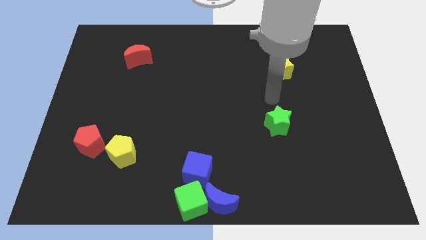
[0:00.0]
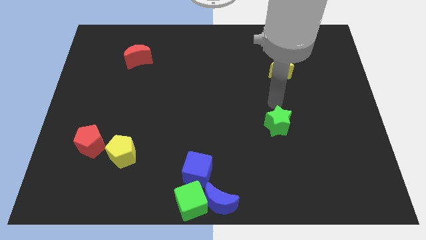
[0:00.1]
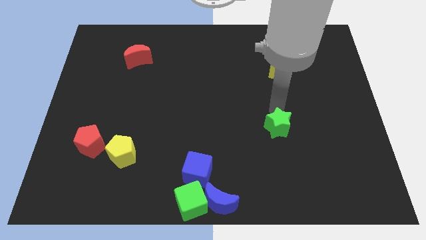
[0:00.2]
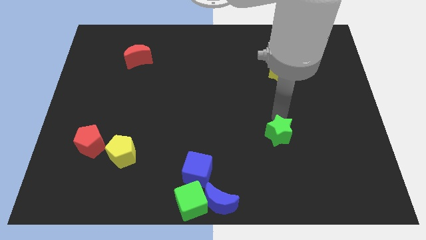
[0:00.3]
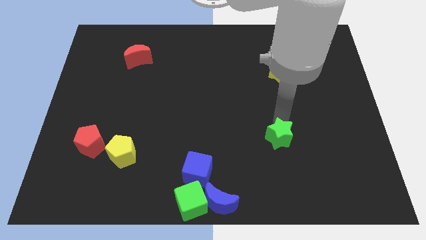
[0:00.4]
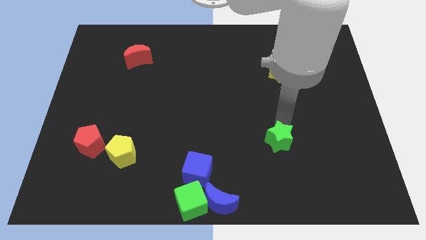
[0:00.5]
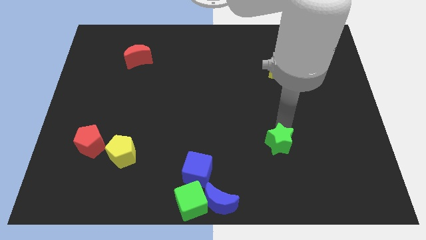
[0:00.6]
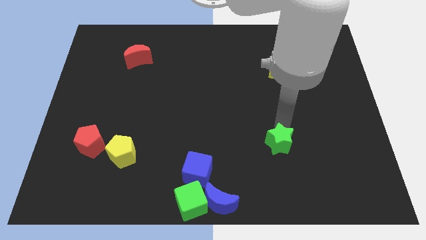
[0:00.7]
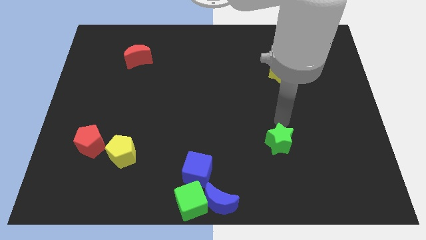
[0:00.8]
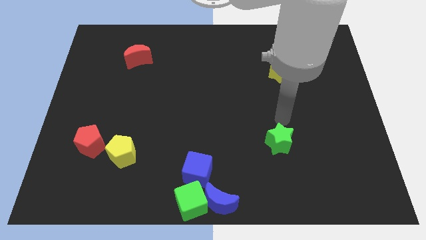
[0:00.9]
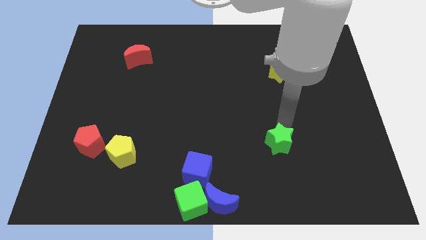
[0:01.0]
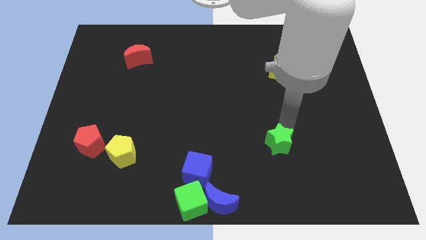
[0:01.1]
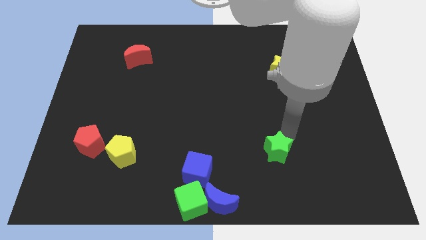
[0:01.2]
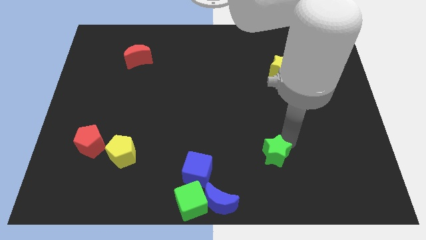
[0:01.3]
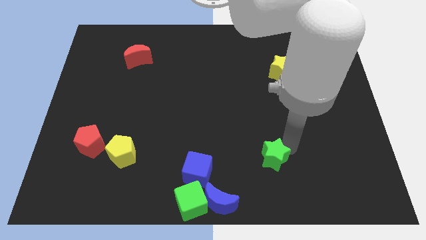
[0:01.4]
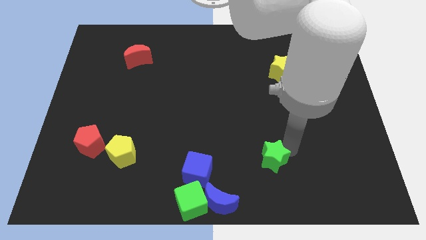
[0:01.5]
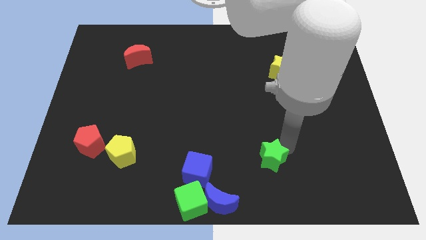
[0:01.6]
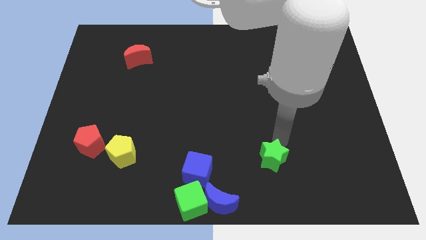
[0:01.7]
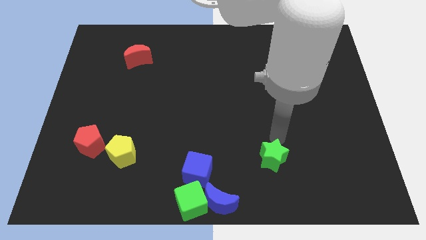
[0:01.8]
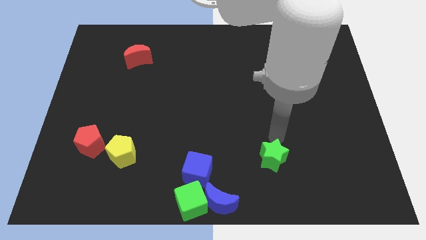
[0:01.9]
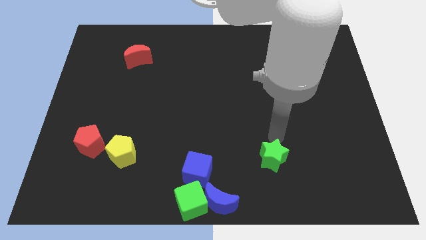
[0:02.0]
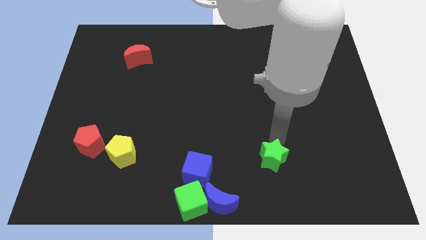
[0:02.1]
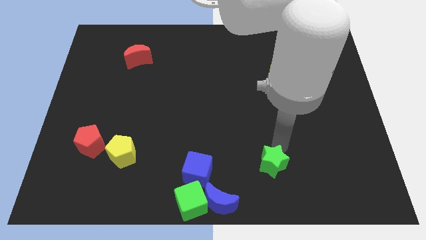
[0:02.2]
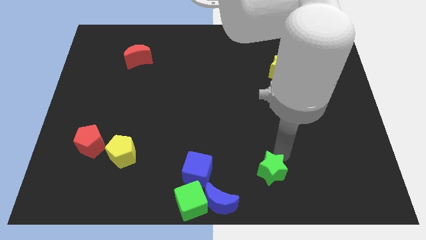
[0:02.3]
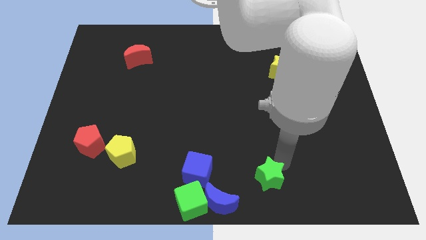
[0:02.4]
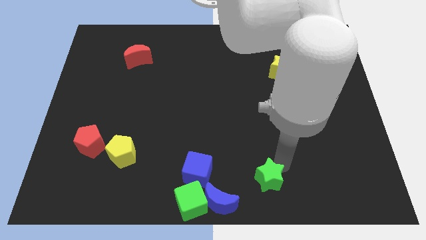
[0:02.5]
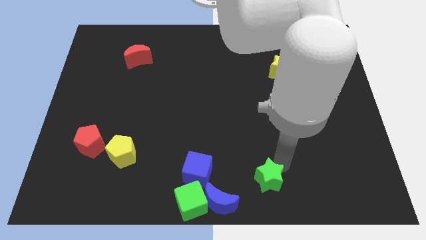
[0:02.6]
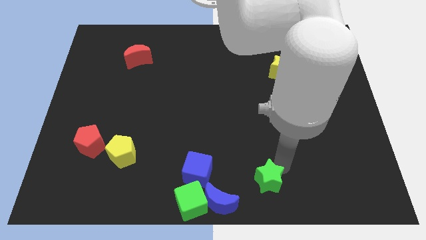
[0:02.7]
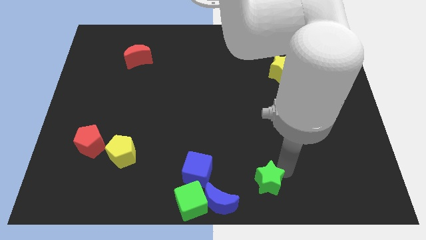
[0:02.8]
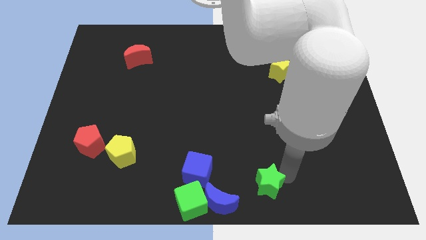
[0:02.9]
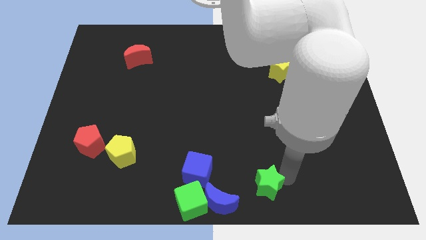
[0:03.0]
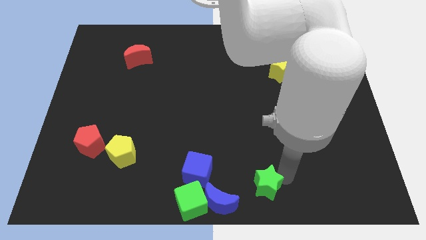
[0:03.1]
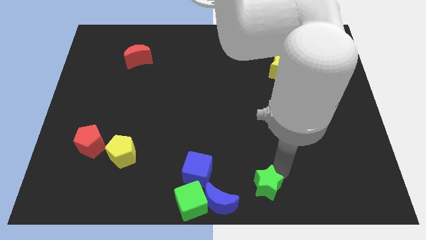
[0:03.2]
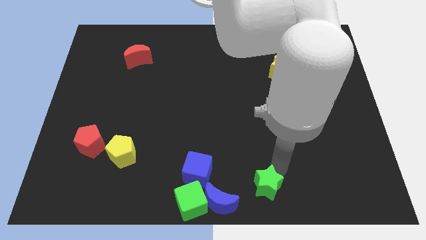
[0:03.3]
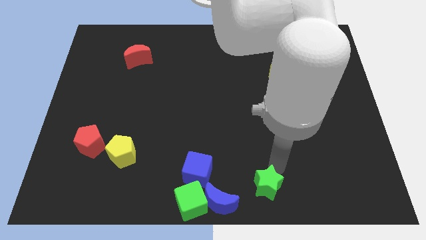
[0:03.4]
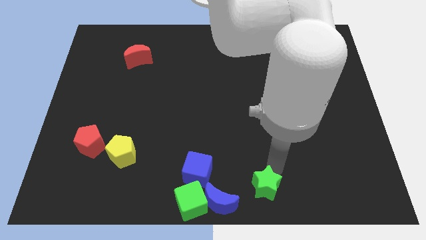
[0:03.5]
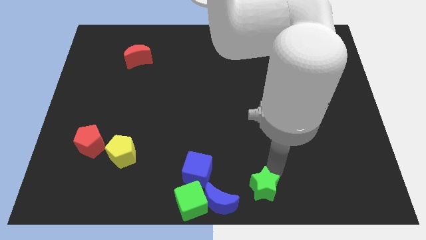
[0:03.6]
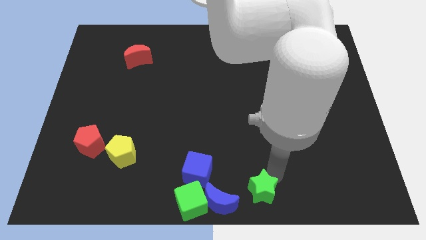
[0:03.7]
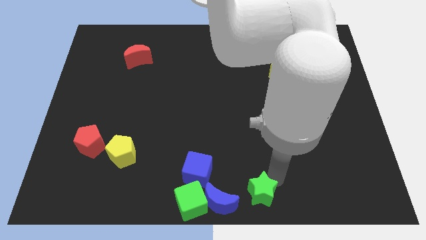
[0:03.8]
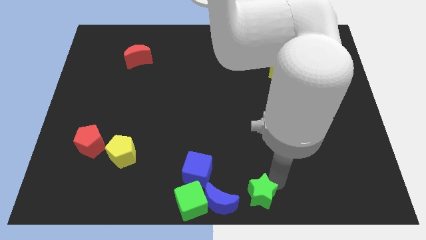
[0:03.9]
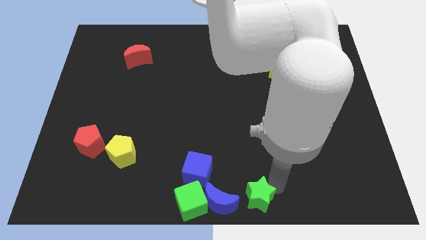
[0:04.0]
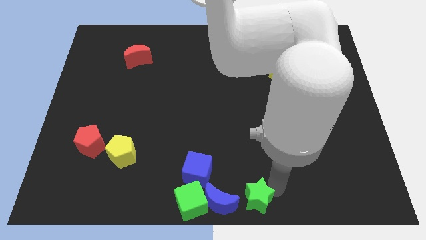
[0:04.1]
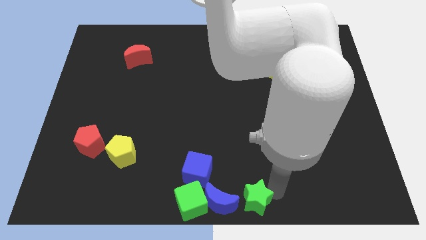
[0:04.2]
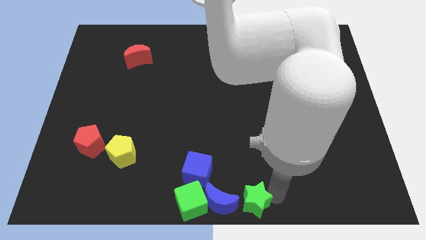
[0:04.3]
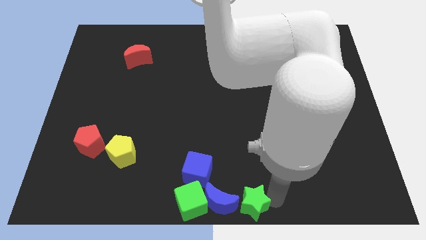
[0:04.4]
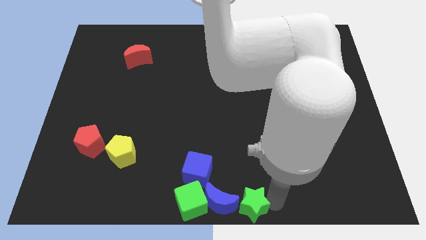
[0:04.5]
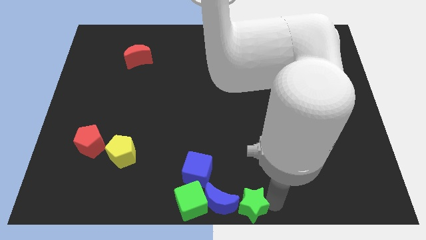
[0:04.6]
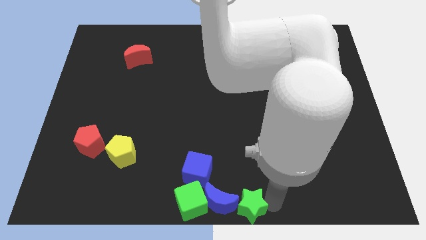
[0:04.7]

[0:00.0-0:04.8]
push the green star into the group of blocks

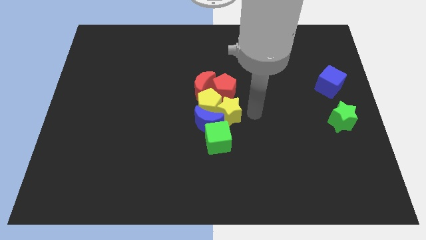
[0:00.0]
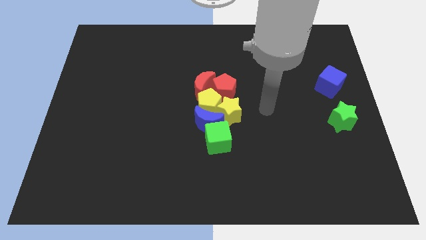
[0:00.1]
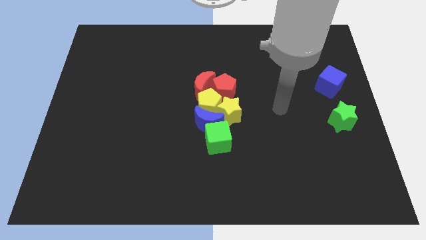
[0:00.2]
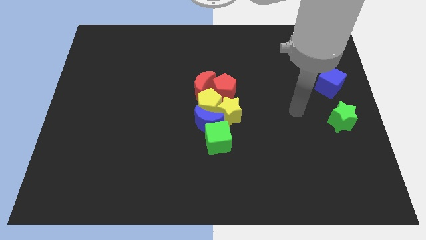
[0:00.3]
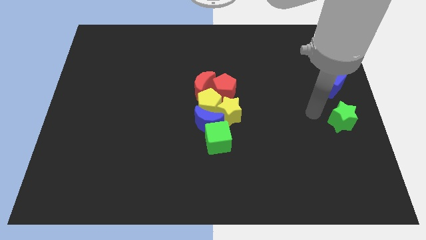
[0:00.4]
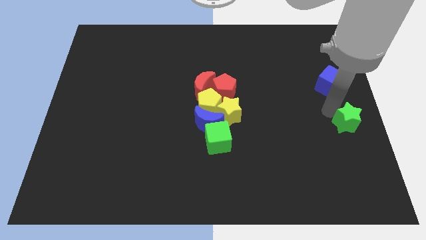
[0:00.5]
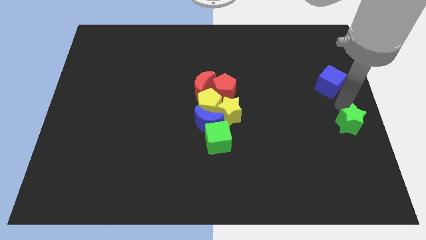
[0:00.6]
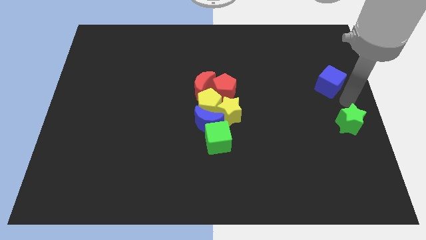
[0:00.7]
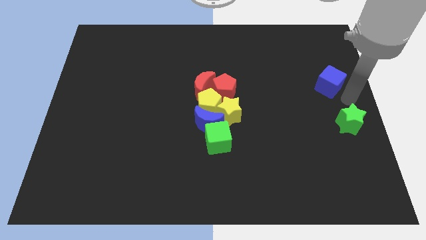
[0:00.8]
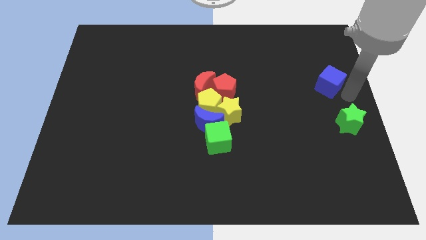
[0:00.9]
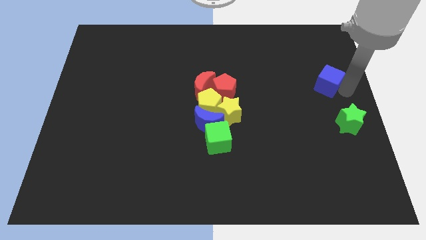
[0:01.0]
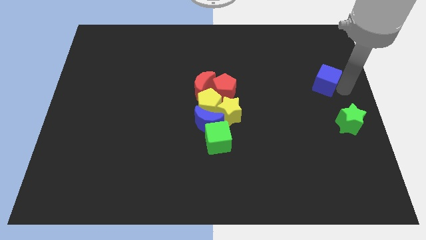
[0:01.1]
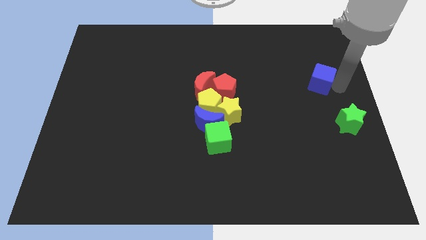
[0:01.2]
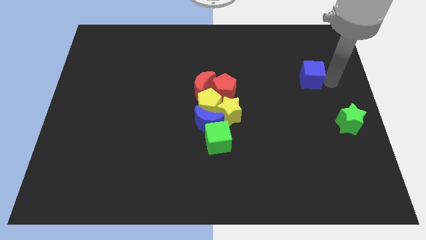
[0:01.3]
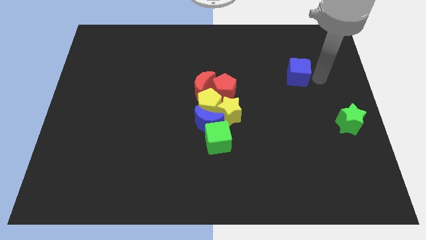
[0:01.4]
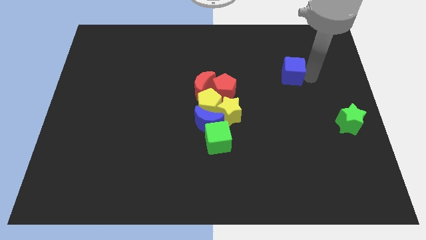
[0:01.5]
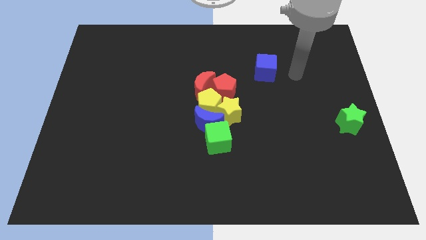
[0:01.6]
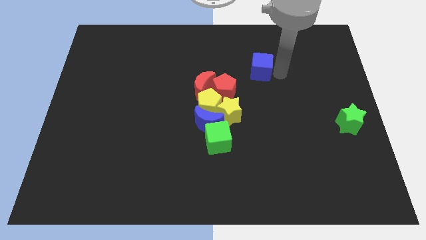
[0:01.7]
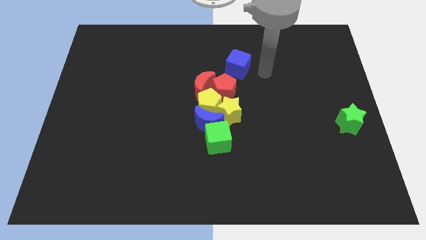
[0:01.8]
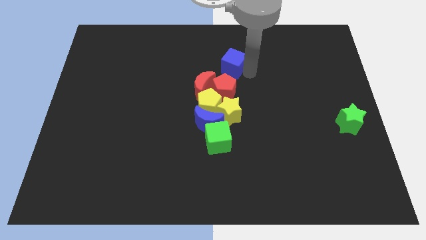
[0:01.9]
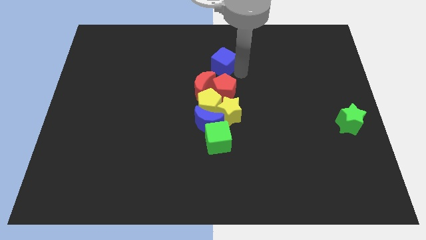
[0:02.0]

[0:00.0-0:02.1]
move the blue cube to the top side of the group of blocks

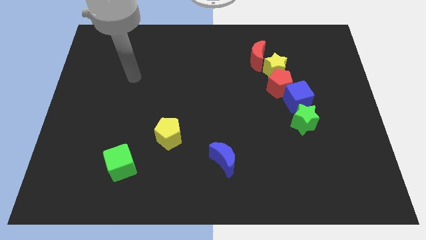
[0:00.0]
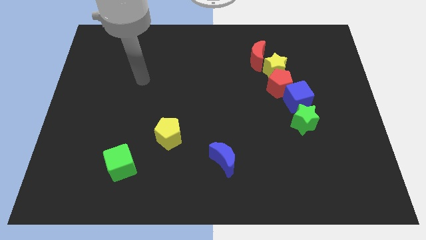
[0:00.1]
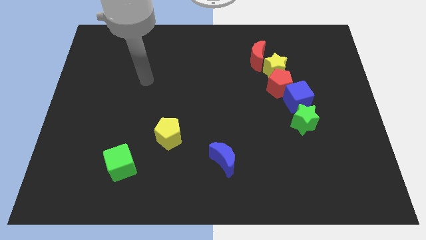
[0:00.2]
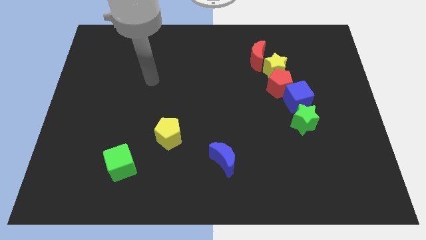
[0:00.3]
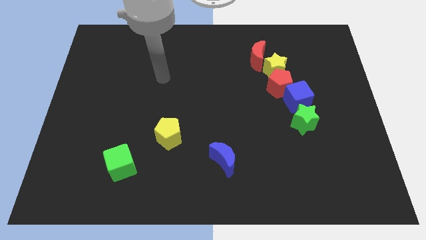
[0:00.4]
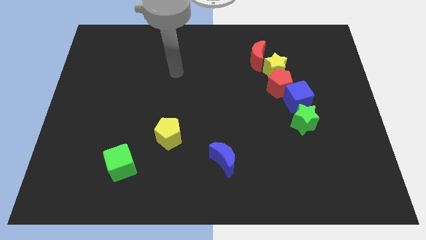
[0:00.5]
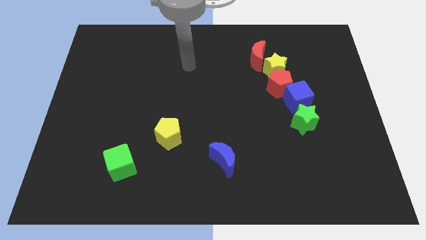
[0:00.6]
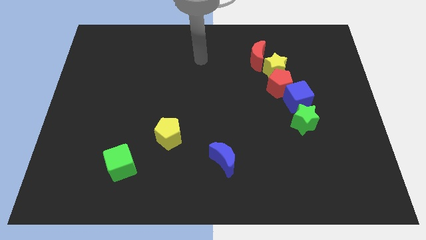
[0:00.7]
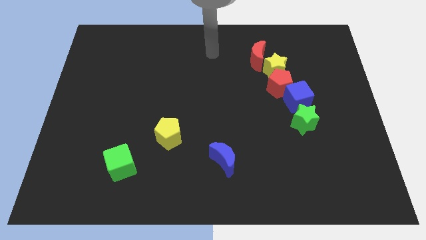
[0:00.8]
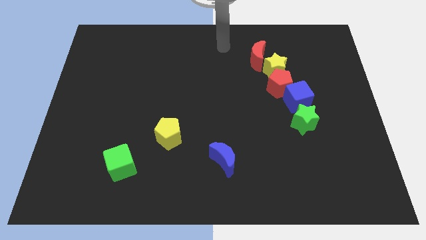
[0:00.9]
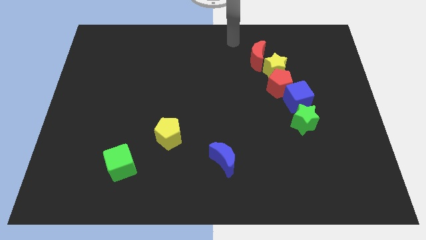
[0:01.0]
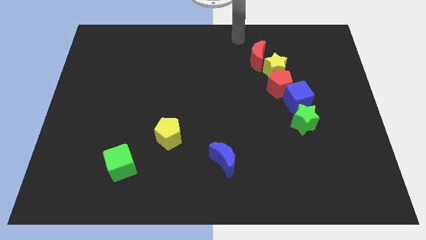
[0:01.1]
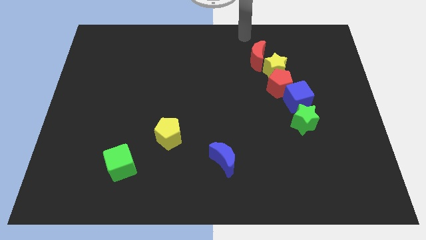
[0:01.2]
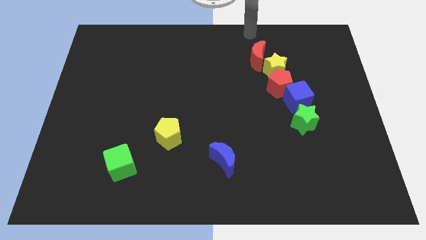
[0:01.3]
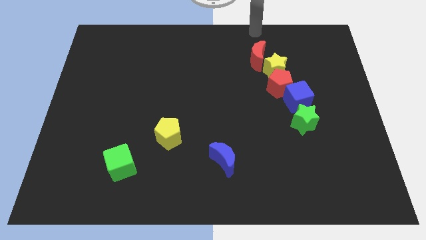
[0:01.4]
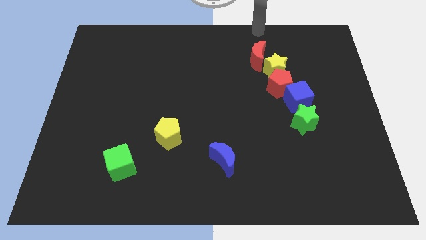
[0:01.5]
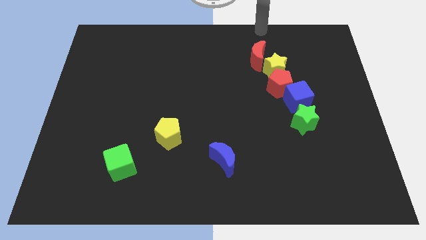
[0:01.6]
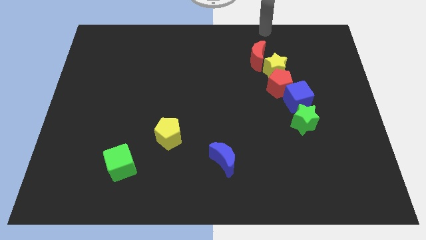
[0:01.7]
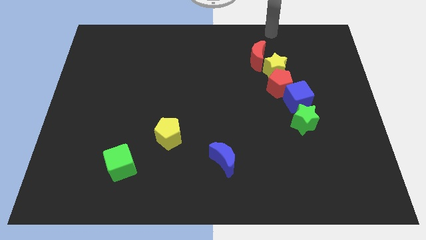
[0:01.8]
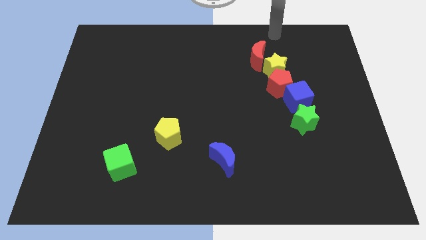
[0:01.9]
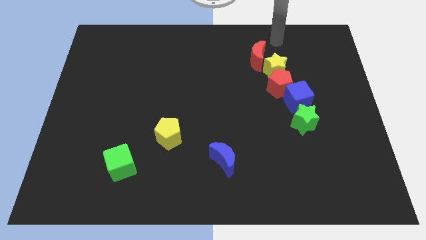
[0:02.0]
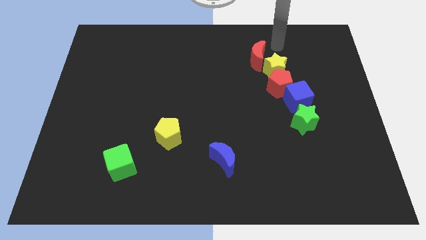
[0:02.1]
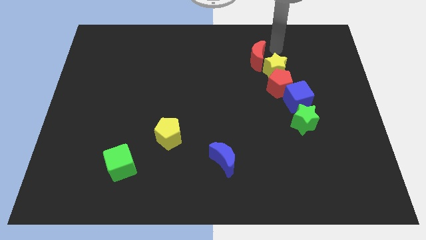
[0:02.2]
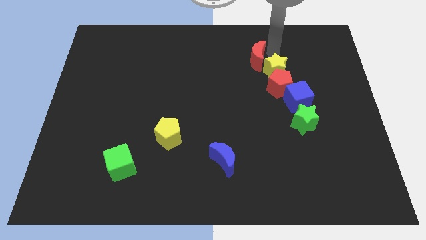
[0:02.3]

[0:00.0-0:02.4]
move your arm to the right of red crescent
